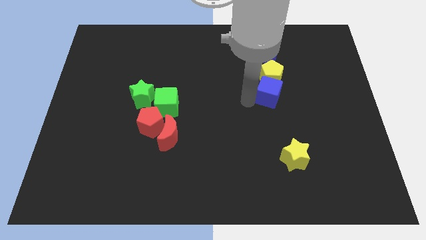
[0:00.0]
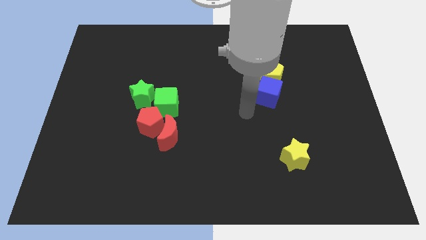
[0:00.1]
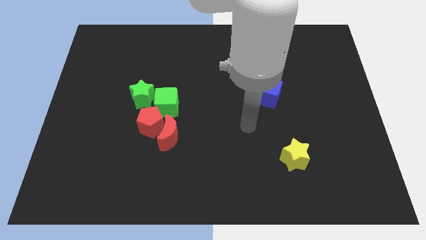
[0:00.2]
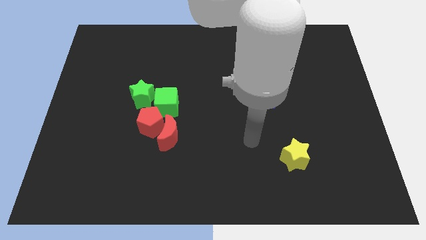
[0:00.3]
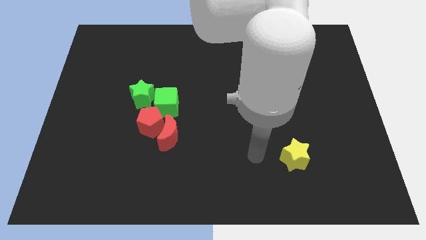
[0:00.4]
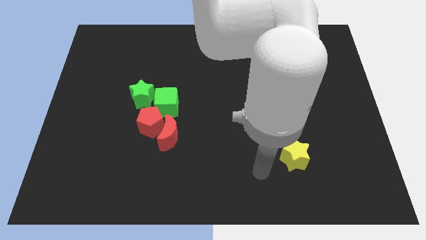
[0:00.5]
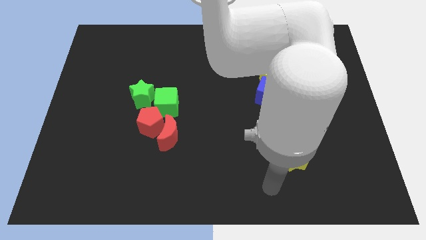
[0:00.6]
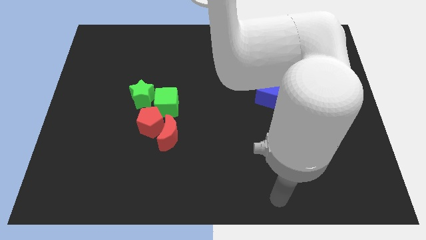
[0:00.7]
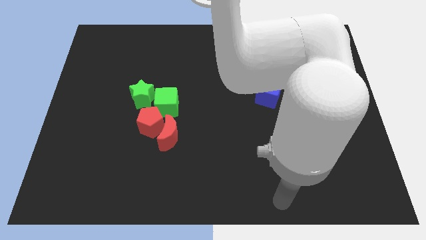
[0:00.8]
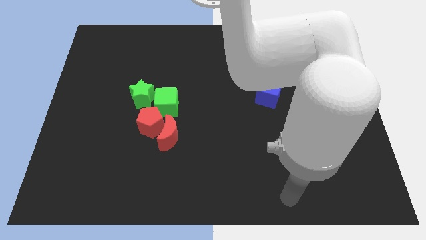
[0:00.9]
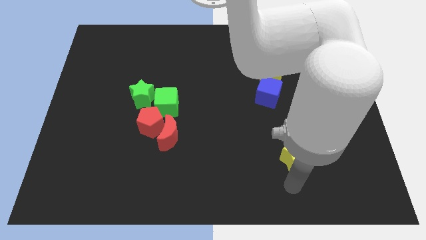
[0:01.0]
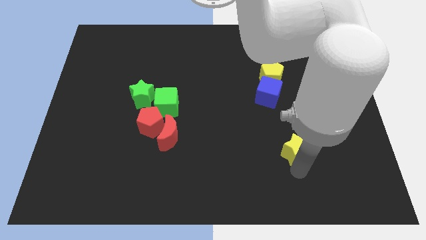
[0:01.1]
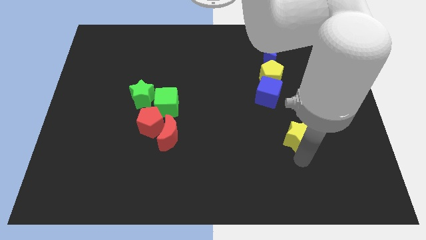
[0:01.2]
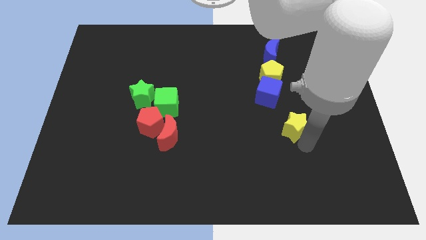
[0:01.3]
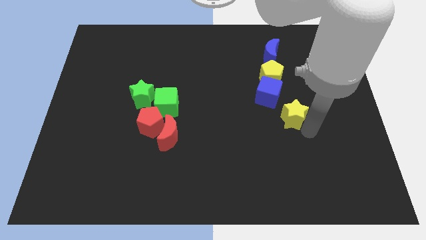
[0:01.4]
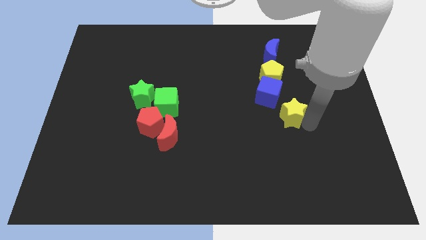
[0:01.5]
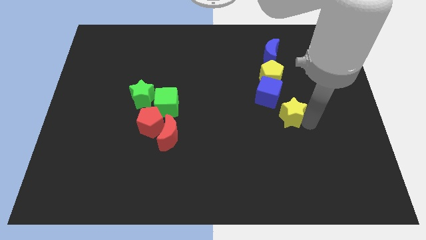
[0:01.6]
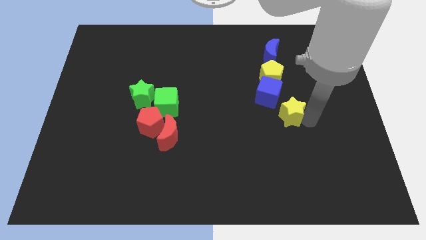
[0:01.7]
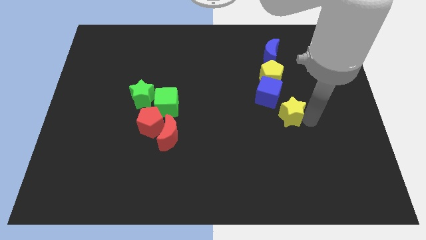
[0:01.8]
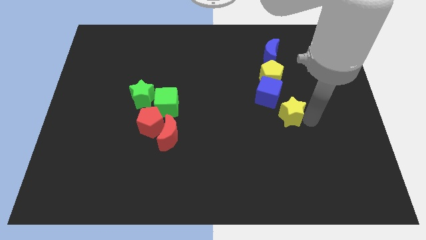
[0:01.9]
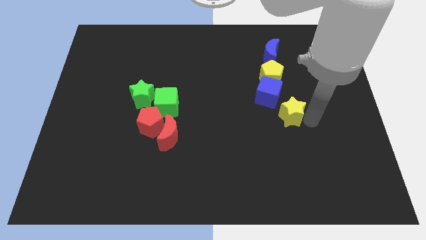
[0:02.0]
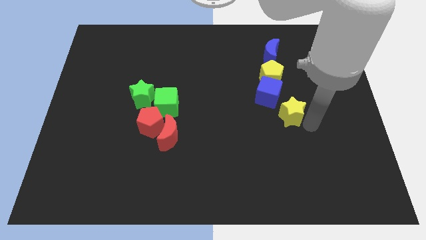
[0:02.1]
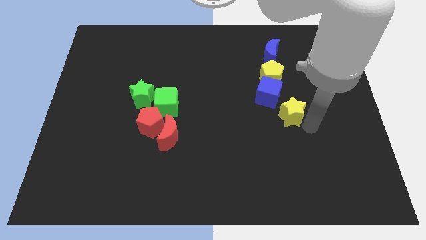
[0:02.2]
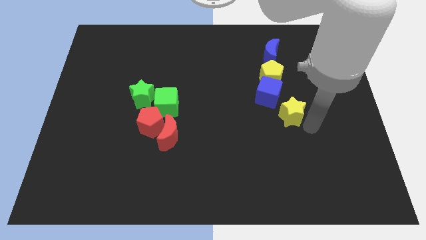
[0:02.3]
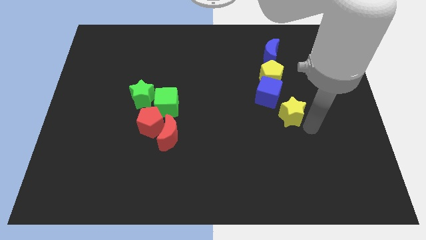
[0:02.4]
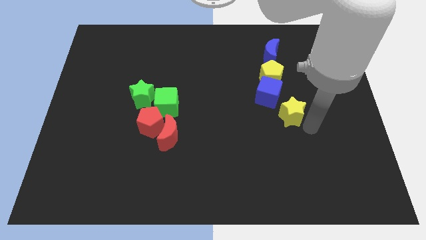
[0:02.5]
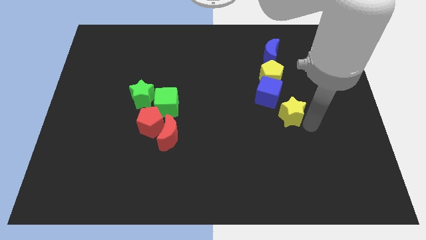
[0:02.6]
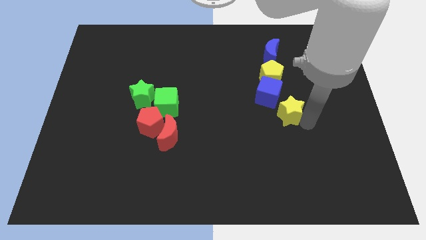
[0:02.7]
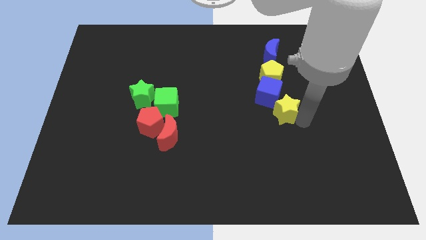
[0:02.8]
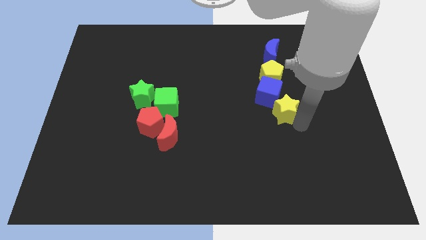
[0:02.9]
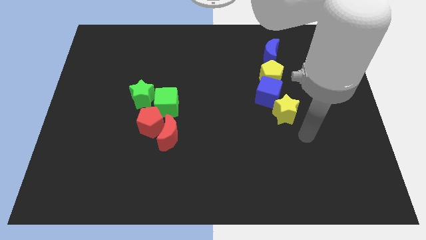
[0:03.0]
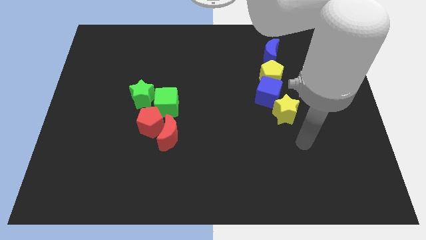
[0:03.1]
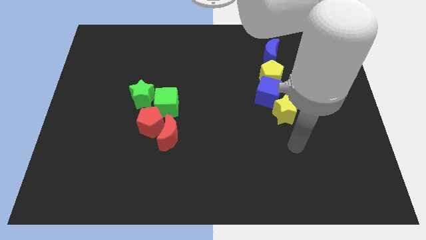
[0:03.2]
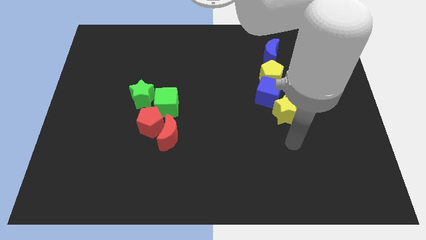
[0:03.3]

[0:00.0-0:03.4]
push yellow star into blue cube

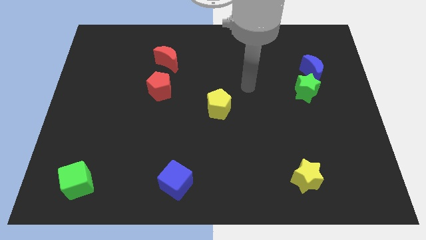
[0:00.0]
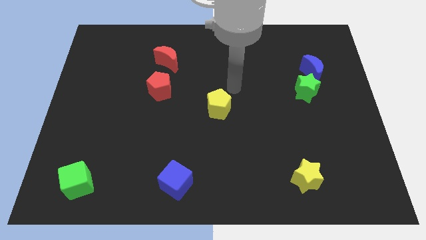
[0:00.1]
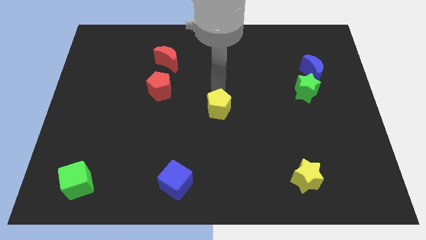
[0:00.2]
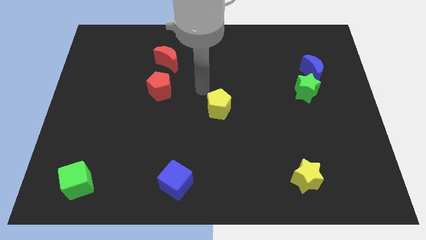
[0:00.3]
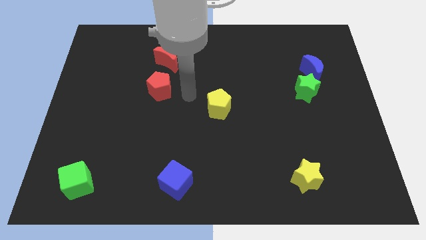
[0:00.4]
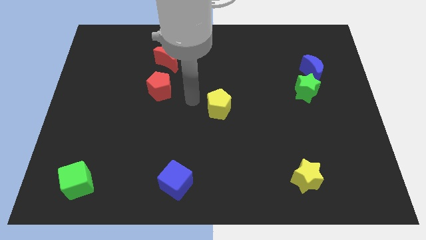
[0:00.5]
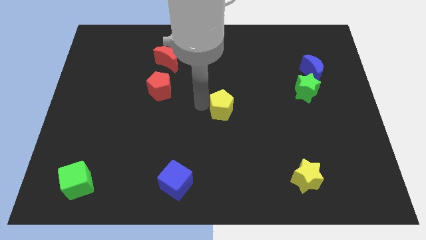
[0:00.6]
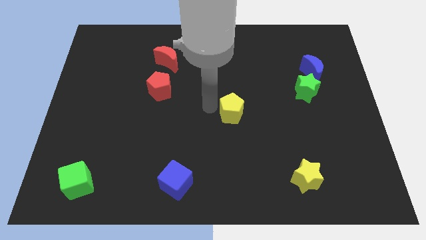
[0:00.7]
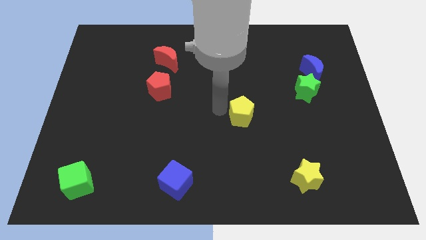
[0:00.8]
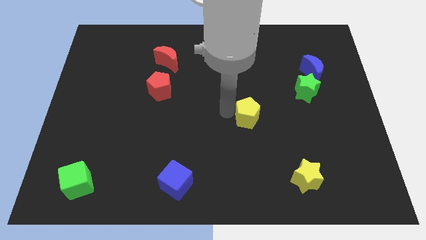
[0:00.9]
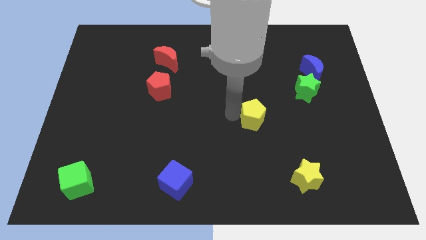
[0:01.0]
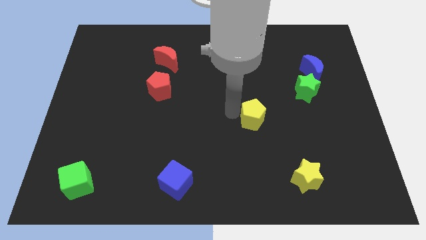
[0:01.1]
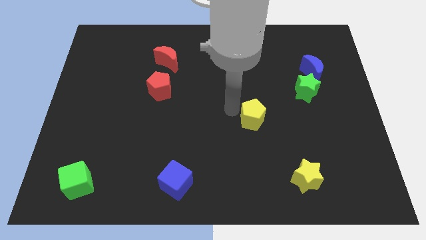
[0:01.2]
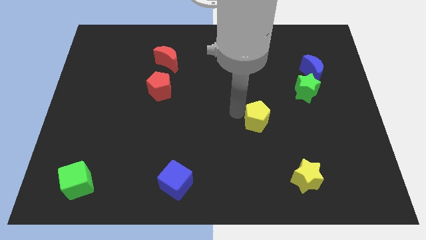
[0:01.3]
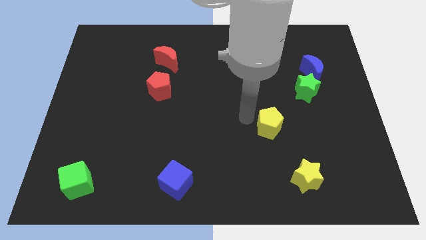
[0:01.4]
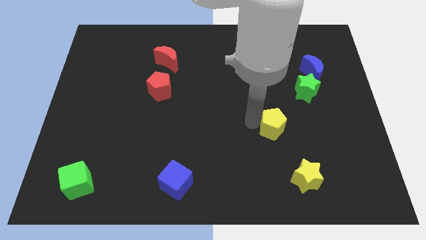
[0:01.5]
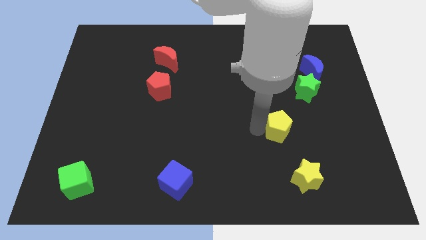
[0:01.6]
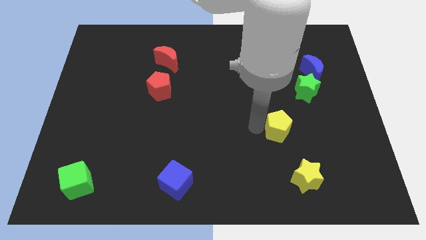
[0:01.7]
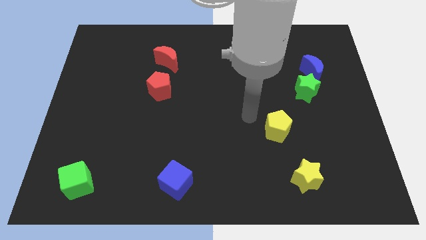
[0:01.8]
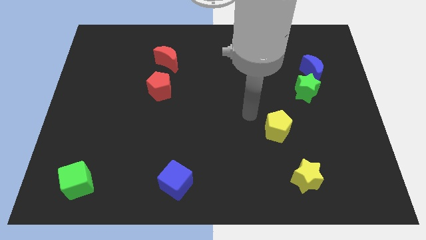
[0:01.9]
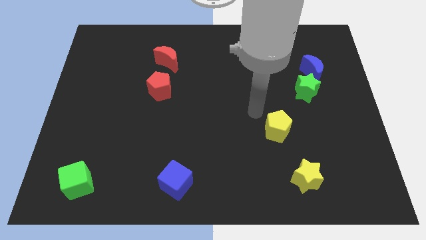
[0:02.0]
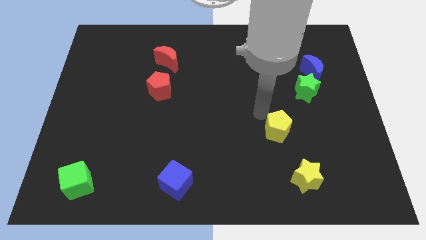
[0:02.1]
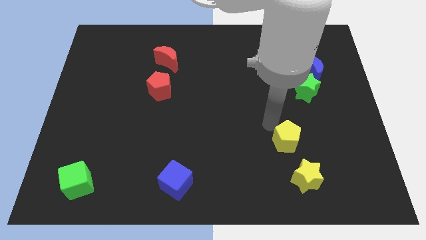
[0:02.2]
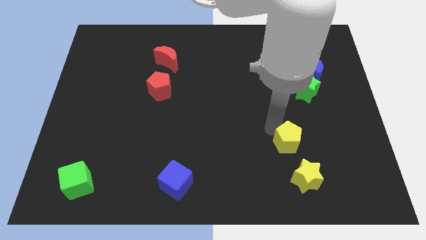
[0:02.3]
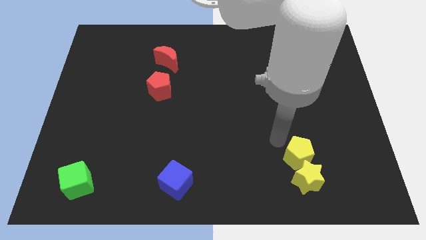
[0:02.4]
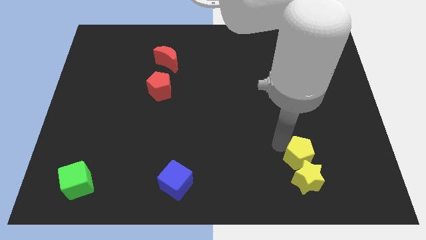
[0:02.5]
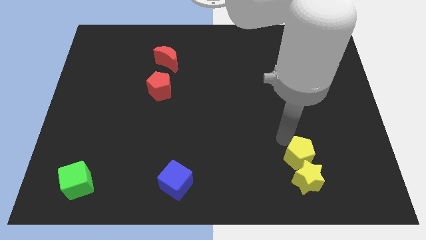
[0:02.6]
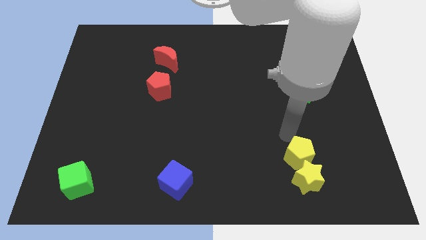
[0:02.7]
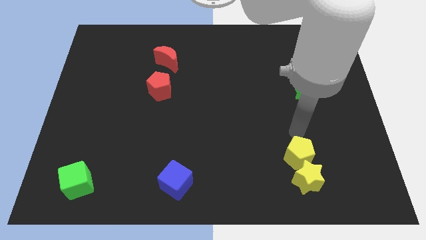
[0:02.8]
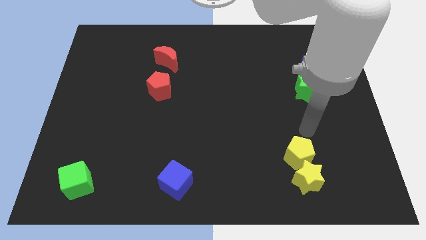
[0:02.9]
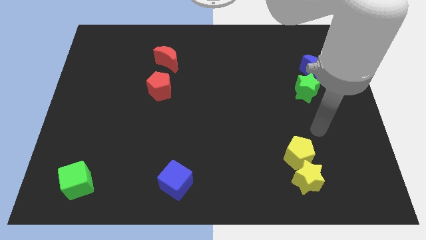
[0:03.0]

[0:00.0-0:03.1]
push the yellow pentagon into the top side of the yellow star

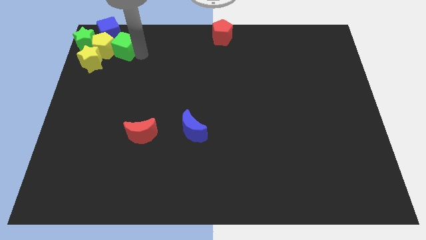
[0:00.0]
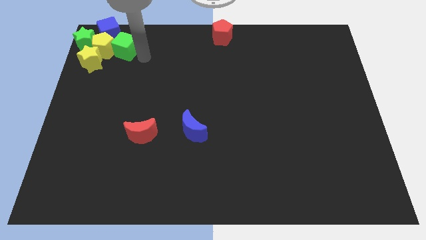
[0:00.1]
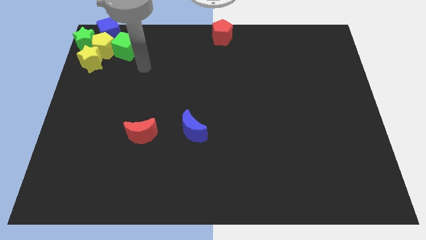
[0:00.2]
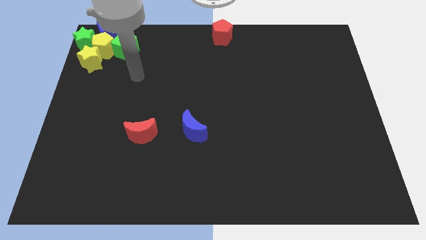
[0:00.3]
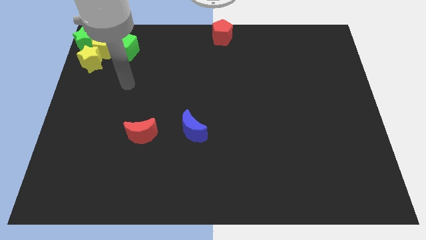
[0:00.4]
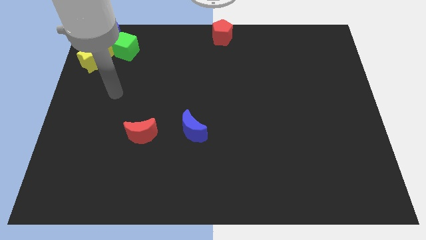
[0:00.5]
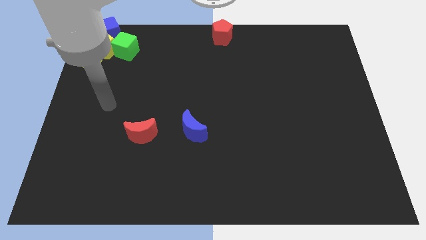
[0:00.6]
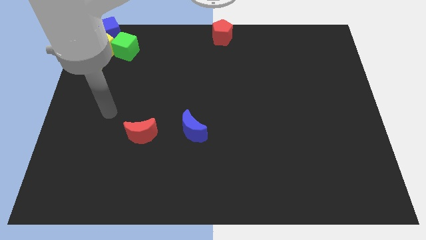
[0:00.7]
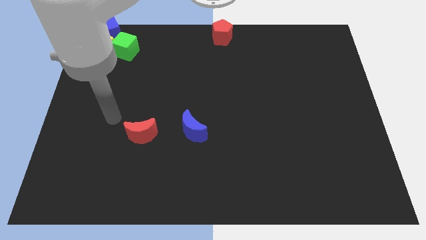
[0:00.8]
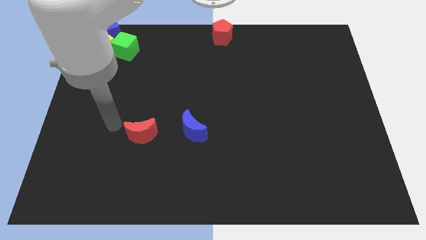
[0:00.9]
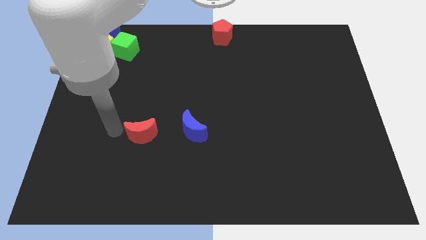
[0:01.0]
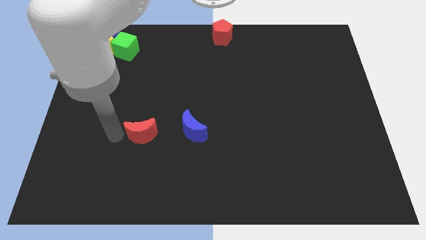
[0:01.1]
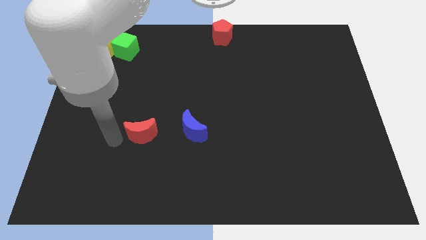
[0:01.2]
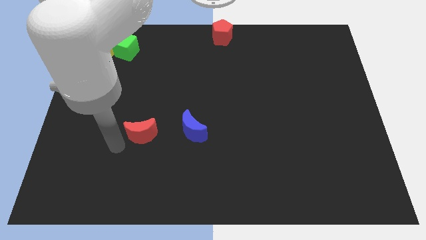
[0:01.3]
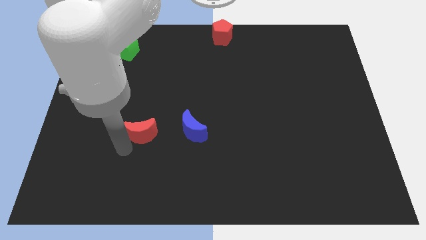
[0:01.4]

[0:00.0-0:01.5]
move your arm towards the bottom of the red crescent

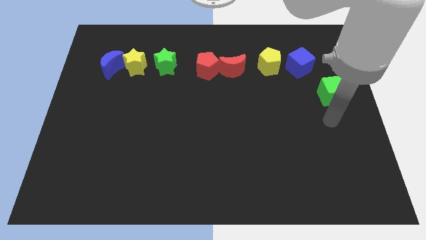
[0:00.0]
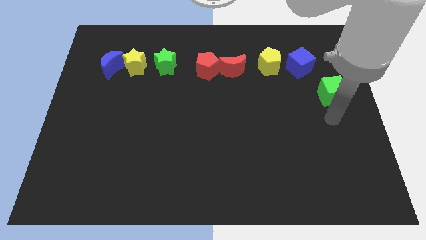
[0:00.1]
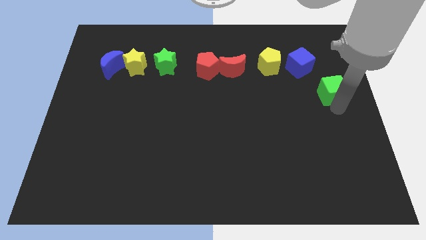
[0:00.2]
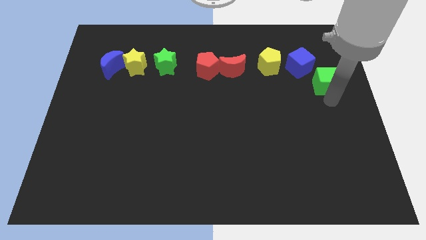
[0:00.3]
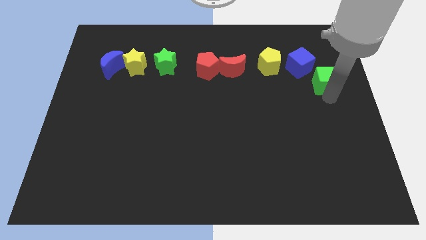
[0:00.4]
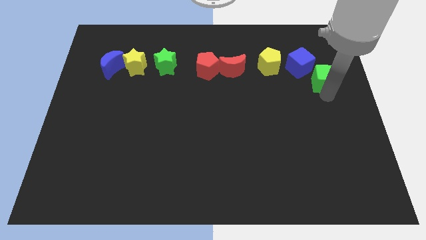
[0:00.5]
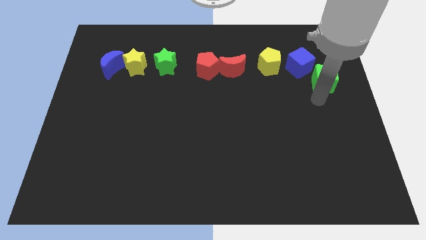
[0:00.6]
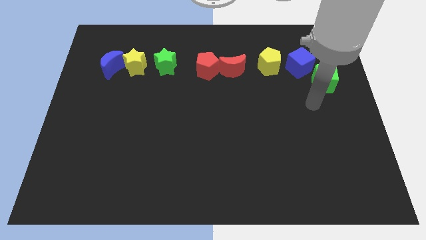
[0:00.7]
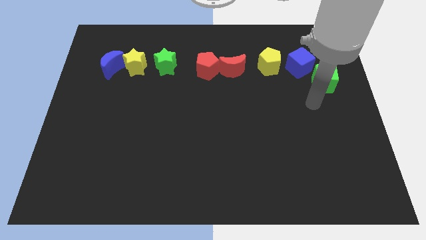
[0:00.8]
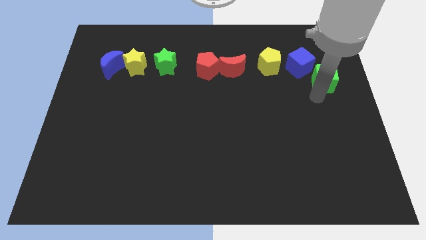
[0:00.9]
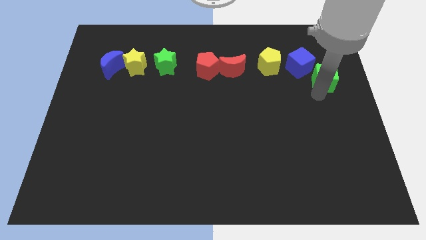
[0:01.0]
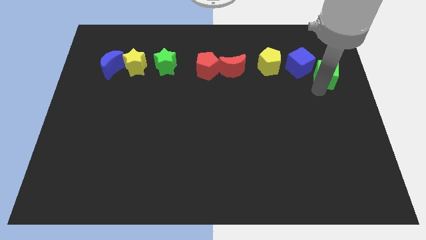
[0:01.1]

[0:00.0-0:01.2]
push the green cube slightly towards up
